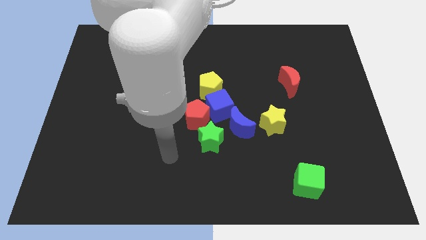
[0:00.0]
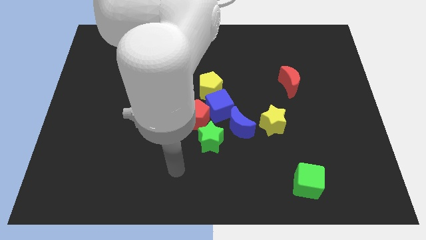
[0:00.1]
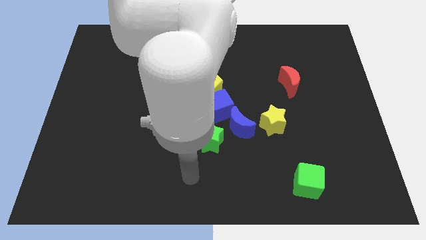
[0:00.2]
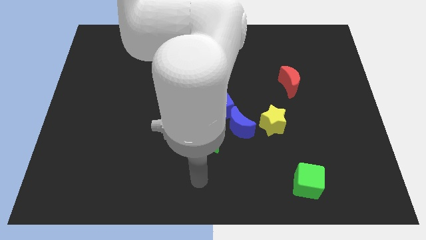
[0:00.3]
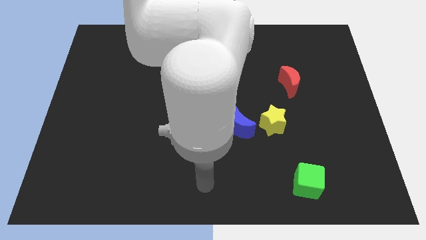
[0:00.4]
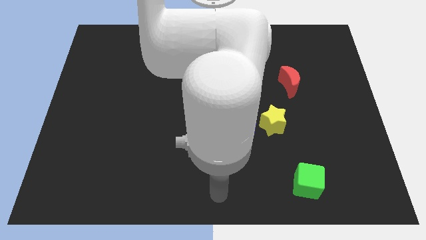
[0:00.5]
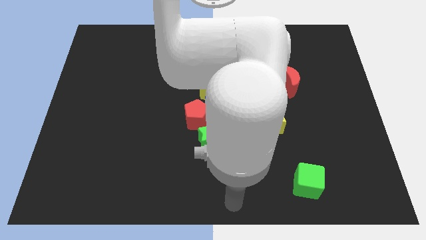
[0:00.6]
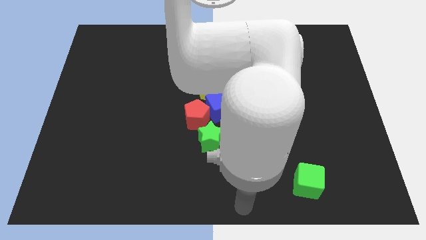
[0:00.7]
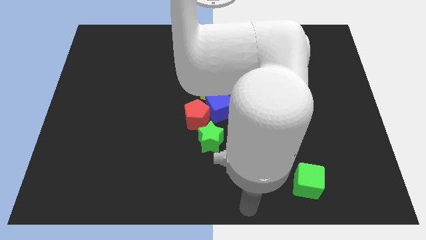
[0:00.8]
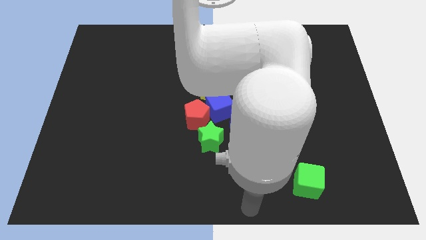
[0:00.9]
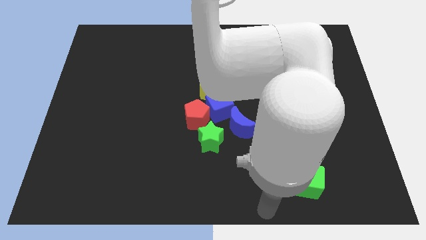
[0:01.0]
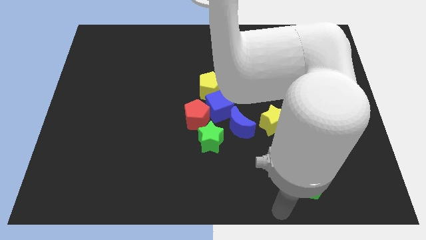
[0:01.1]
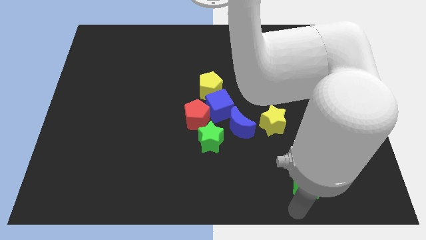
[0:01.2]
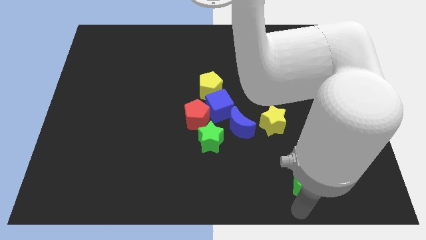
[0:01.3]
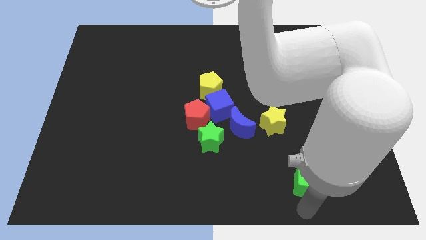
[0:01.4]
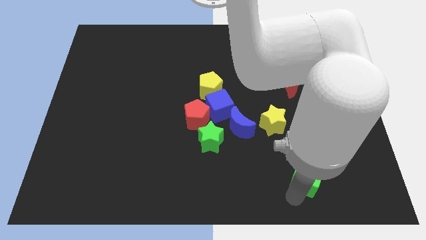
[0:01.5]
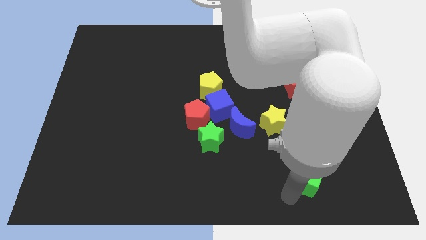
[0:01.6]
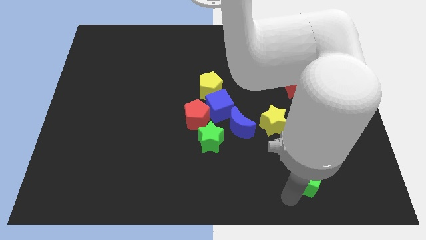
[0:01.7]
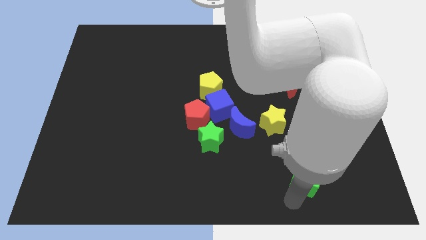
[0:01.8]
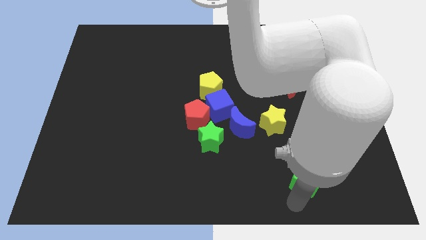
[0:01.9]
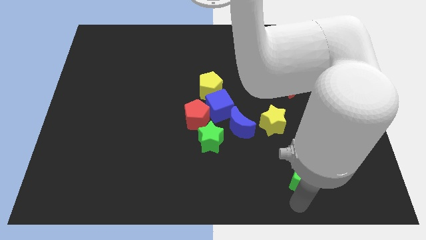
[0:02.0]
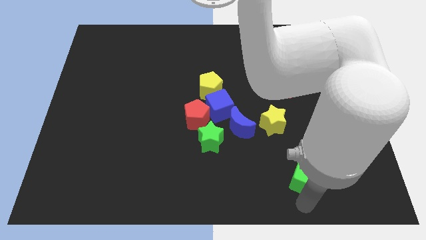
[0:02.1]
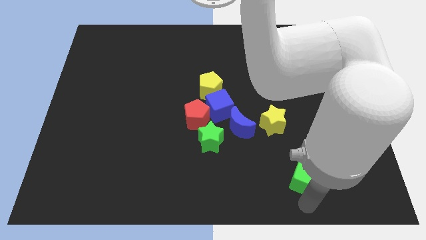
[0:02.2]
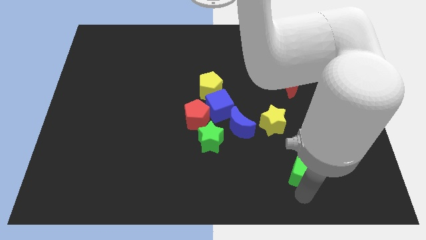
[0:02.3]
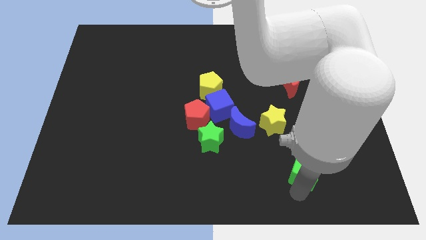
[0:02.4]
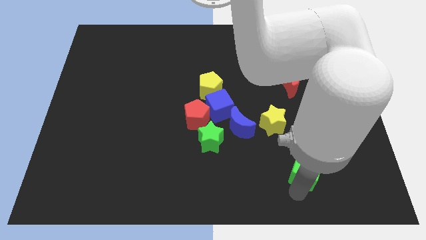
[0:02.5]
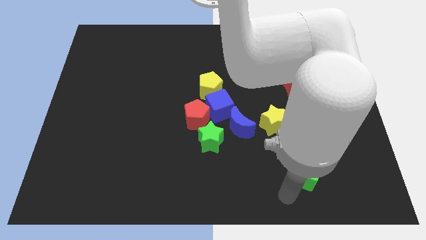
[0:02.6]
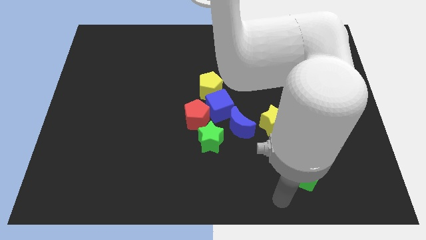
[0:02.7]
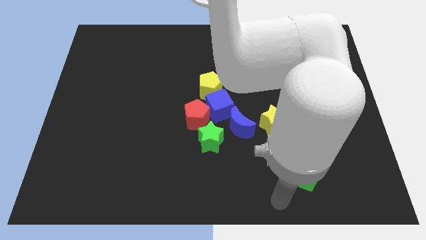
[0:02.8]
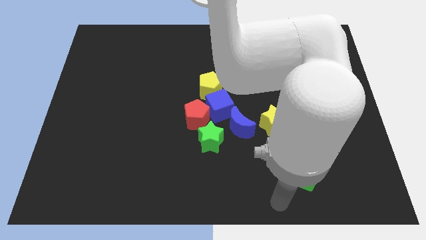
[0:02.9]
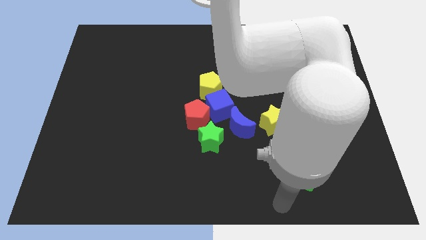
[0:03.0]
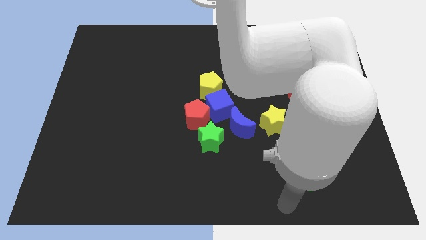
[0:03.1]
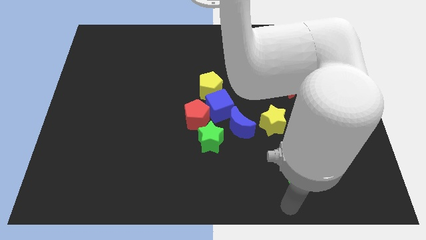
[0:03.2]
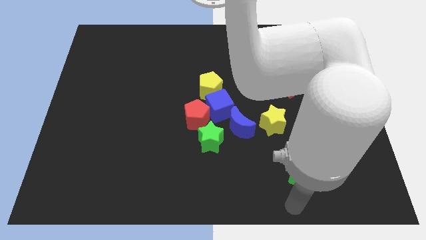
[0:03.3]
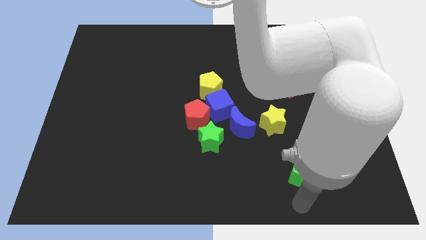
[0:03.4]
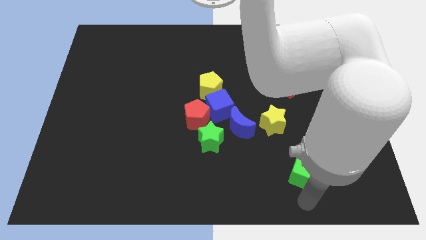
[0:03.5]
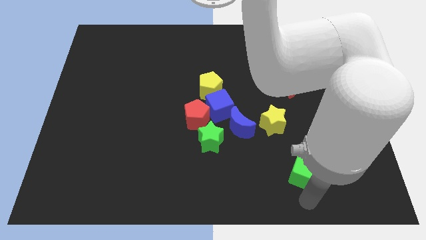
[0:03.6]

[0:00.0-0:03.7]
place your arm below green cube

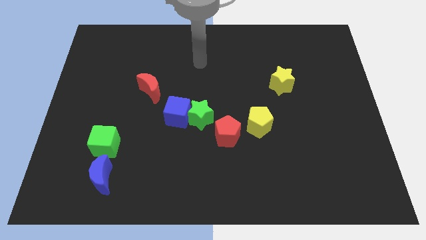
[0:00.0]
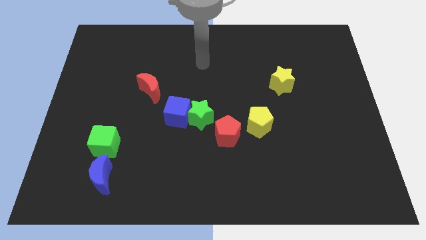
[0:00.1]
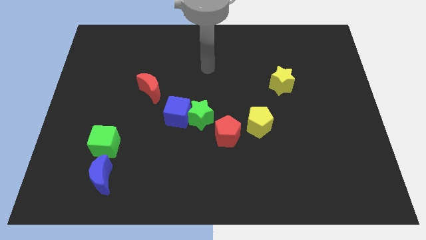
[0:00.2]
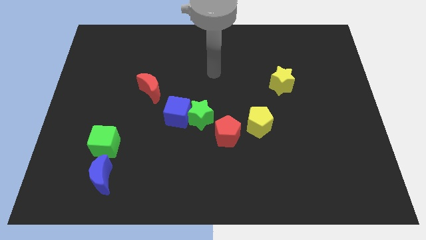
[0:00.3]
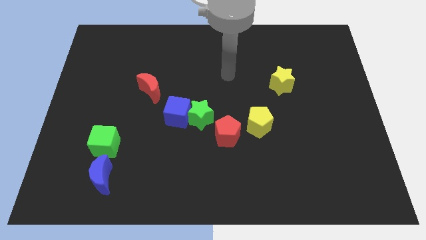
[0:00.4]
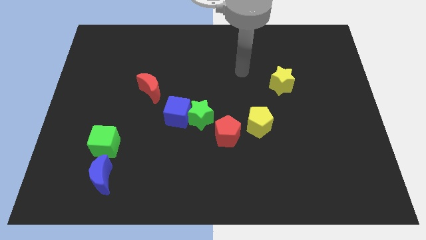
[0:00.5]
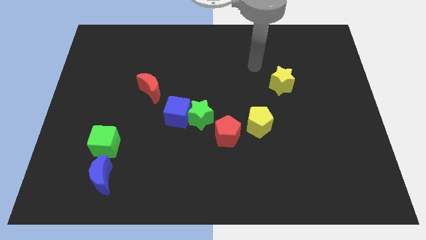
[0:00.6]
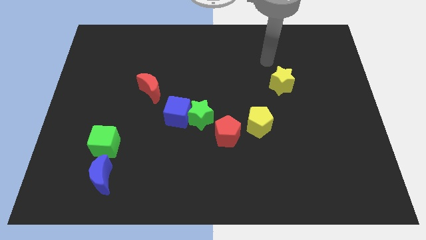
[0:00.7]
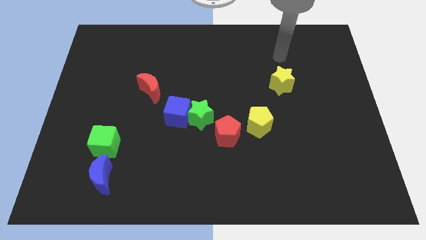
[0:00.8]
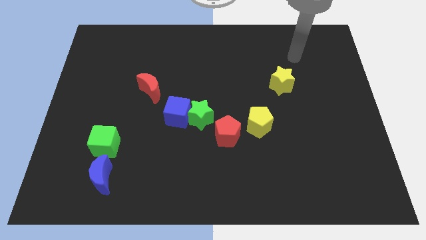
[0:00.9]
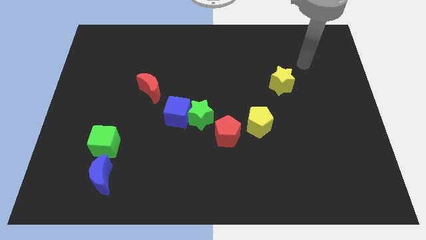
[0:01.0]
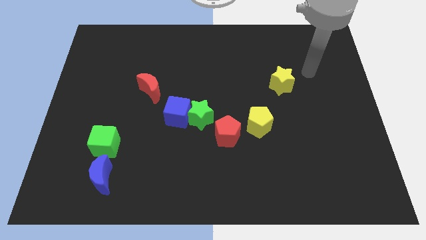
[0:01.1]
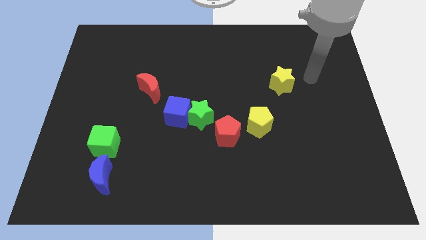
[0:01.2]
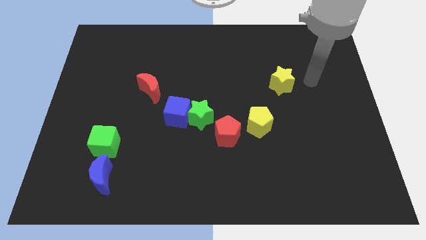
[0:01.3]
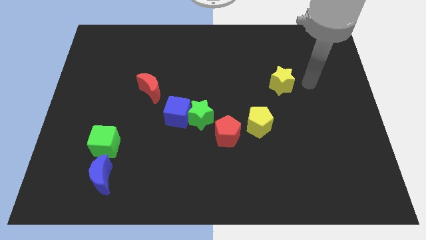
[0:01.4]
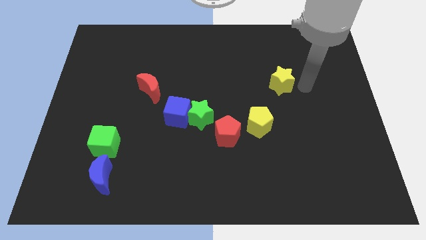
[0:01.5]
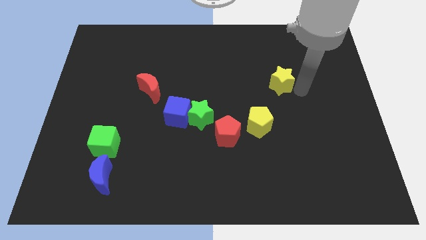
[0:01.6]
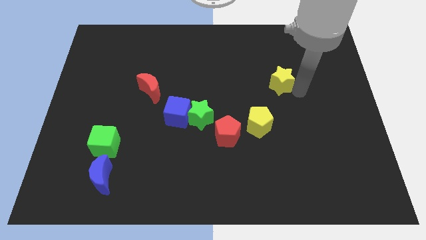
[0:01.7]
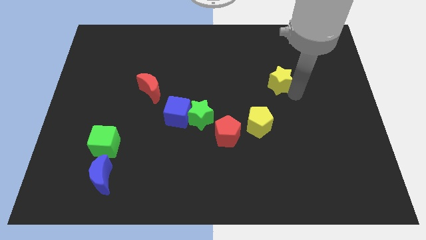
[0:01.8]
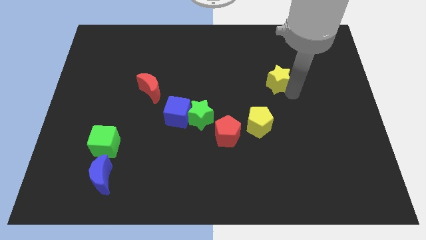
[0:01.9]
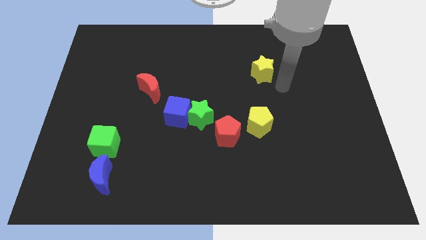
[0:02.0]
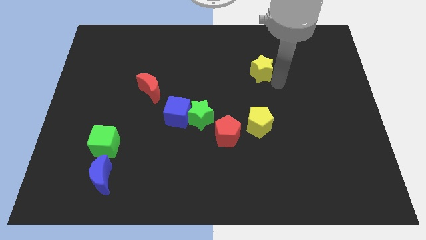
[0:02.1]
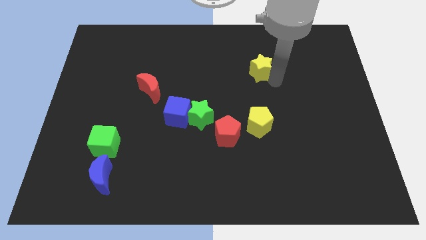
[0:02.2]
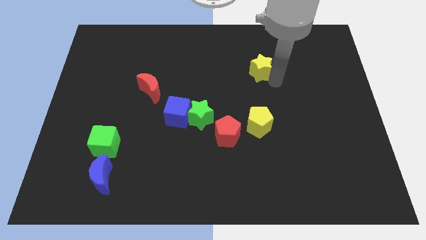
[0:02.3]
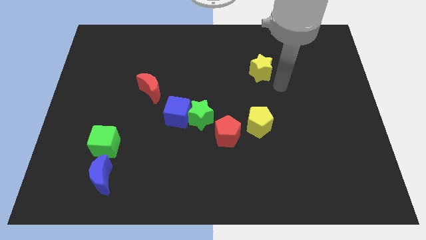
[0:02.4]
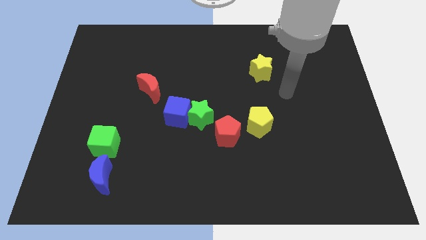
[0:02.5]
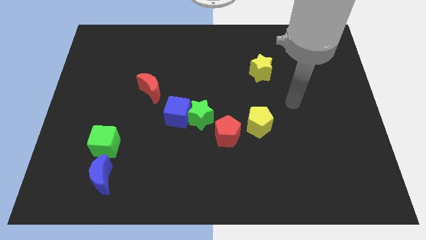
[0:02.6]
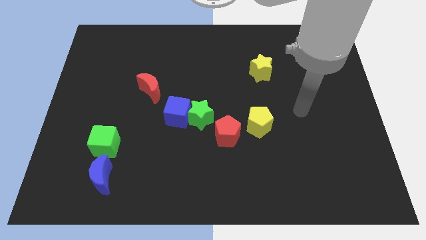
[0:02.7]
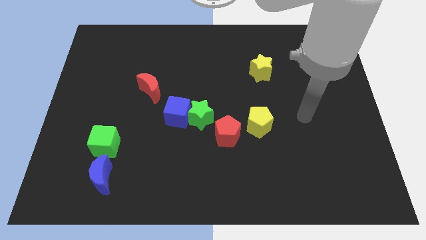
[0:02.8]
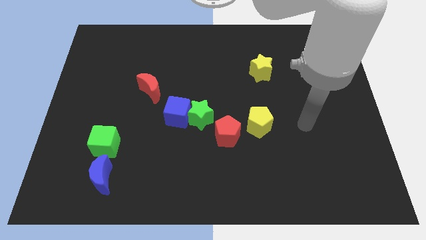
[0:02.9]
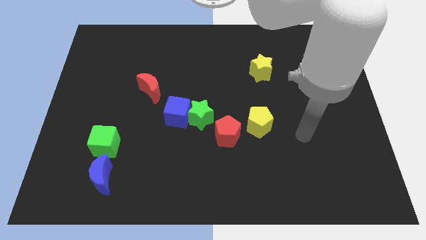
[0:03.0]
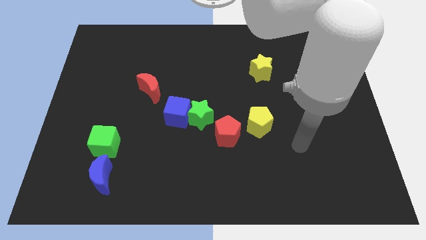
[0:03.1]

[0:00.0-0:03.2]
place the yellow star above the yellow pentagon

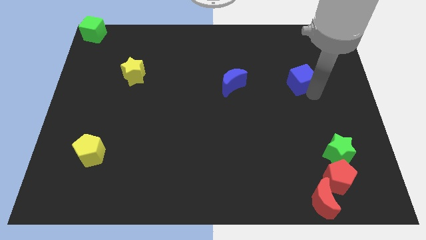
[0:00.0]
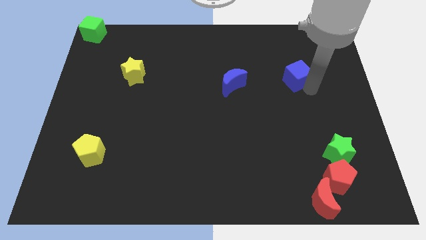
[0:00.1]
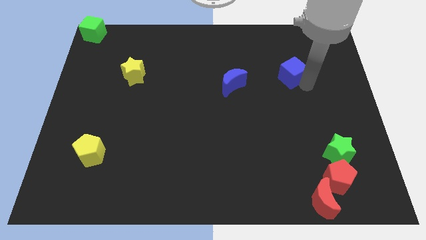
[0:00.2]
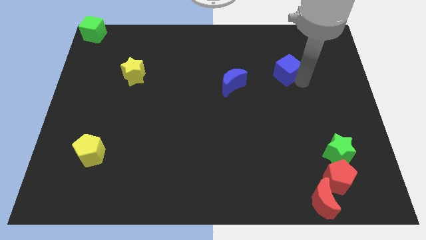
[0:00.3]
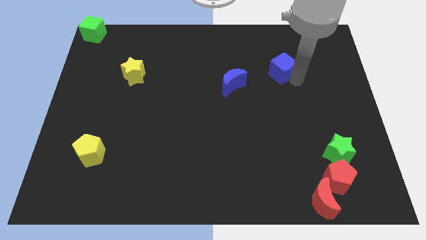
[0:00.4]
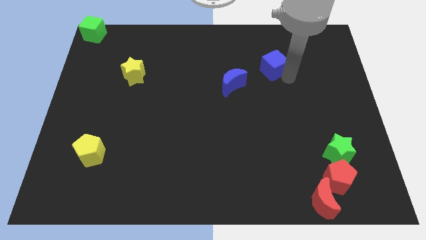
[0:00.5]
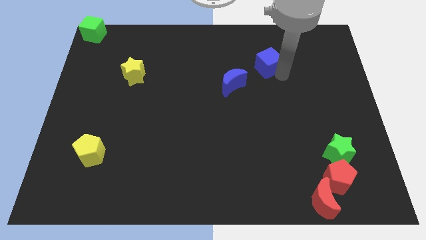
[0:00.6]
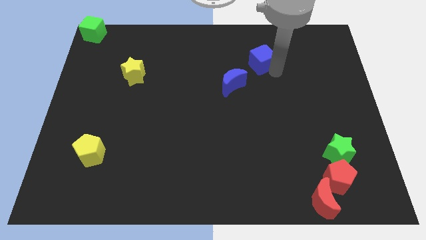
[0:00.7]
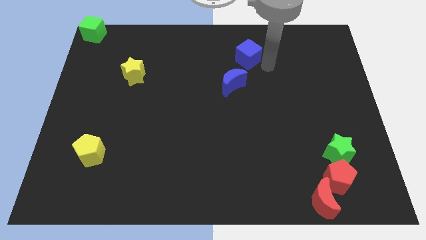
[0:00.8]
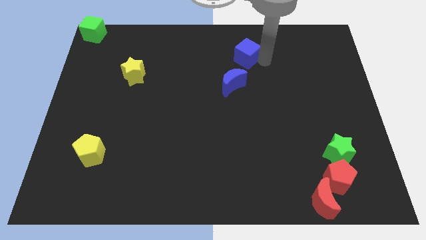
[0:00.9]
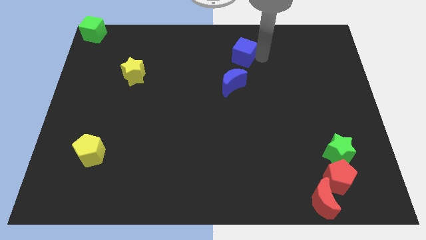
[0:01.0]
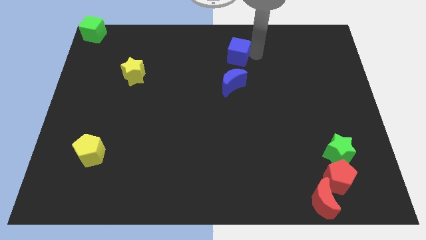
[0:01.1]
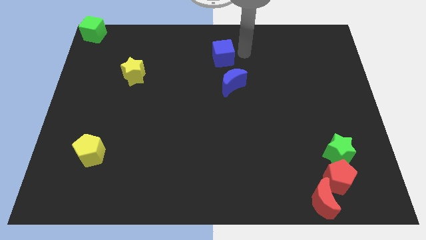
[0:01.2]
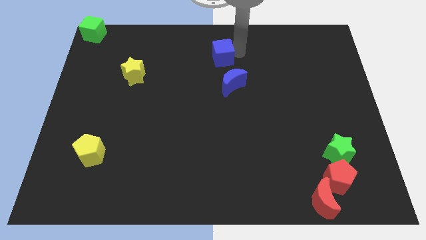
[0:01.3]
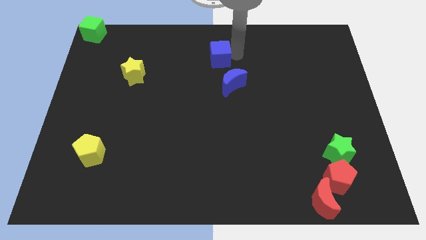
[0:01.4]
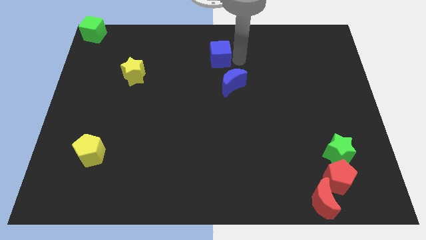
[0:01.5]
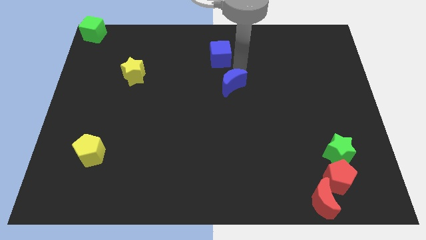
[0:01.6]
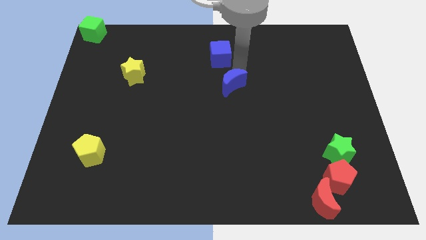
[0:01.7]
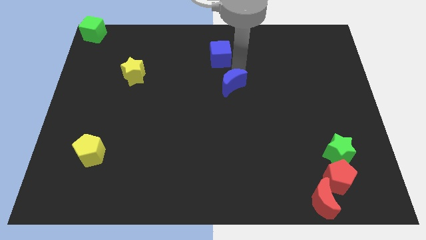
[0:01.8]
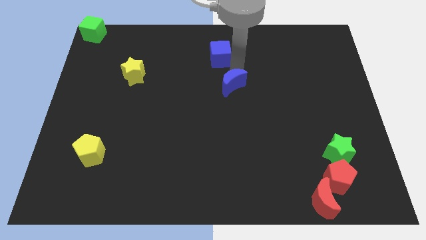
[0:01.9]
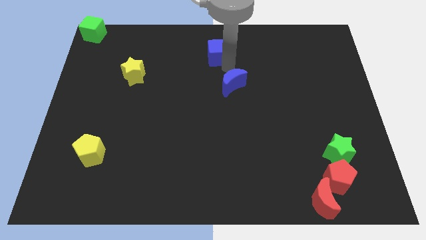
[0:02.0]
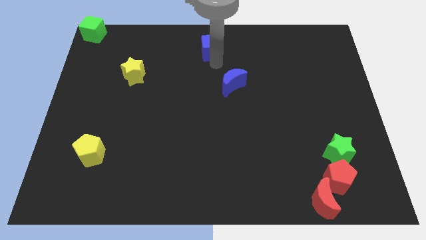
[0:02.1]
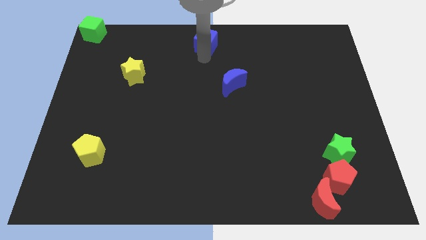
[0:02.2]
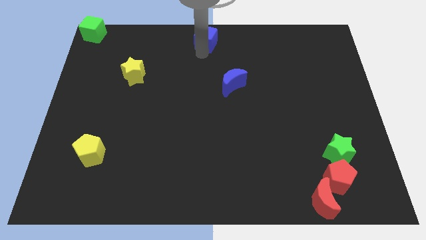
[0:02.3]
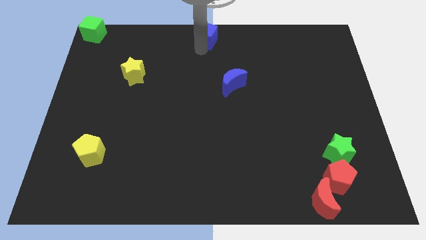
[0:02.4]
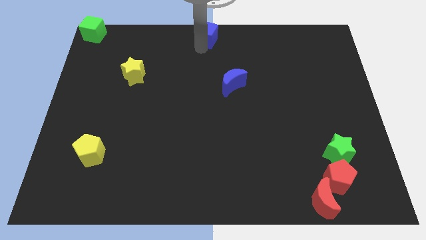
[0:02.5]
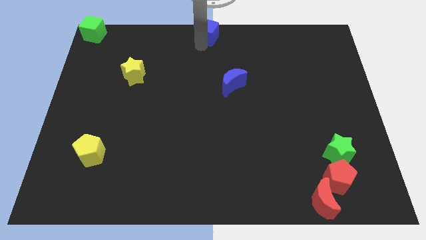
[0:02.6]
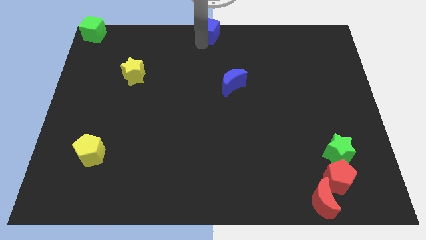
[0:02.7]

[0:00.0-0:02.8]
place the blue cube to the top center
